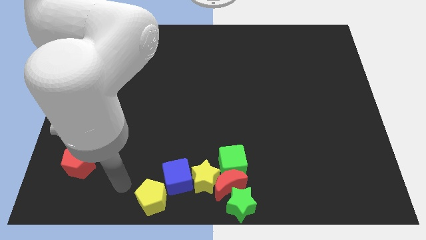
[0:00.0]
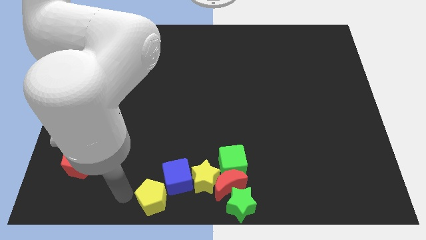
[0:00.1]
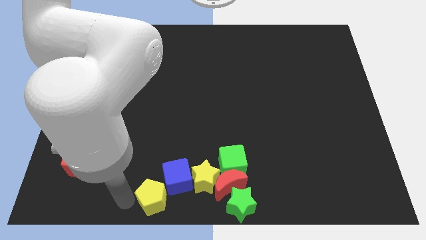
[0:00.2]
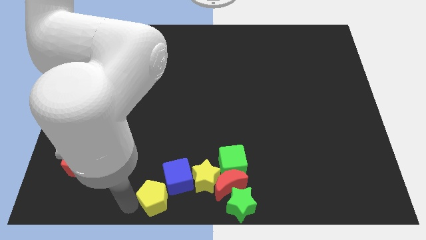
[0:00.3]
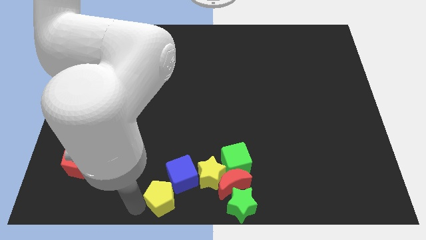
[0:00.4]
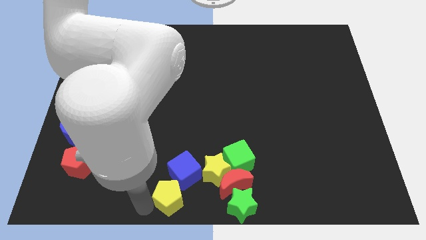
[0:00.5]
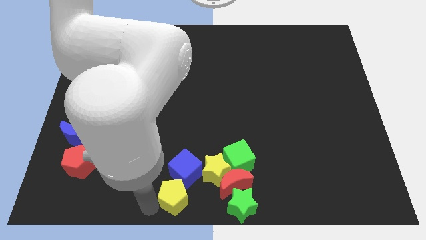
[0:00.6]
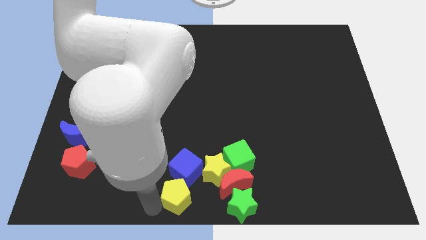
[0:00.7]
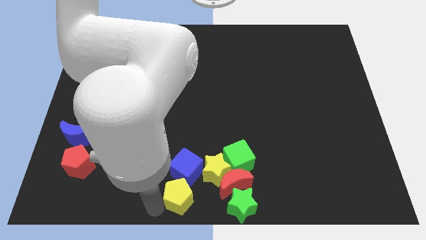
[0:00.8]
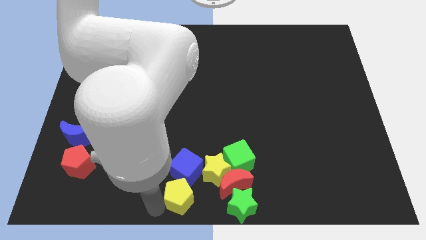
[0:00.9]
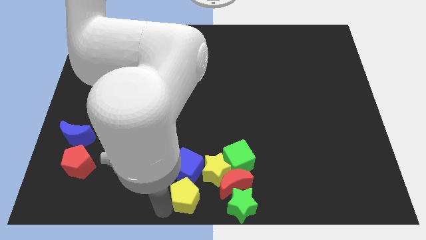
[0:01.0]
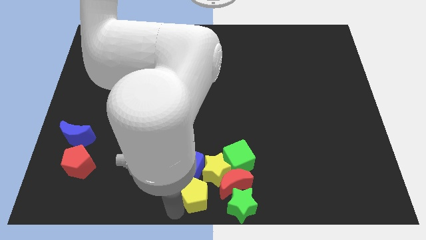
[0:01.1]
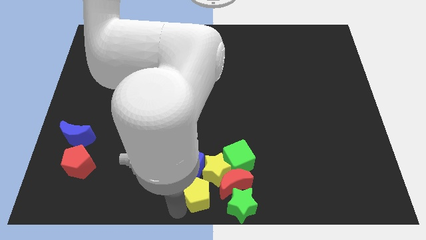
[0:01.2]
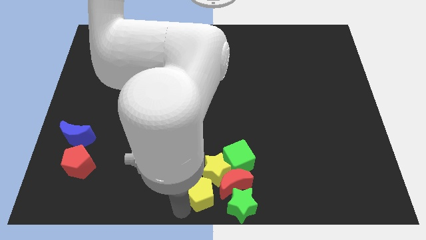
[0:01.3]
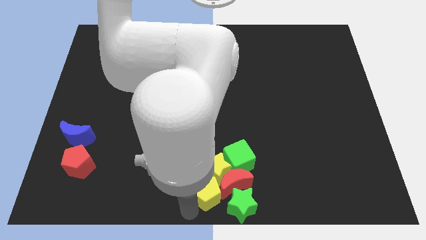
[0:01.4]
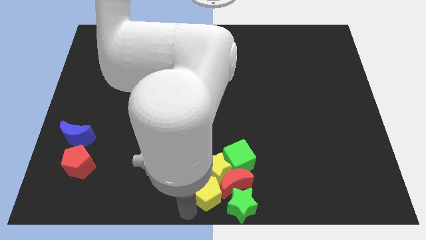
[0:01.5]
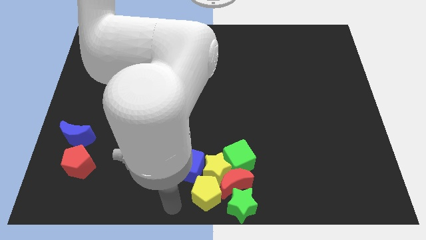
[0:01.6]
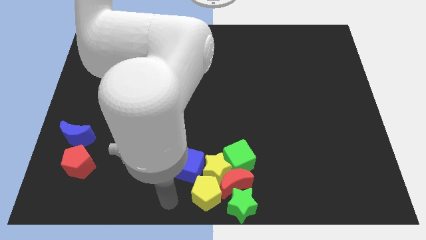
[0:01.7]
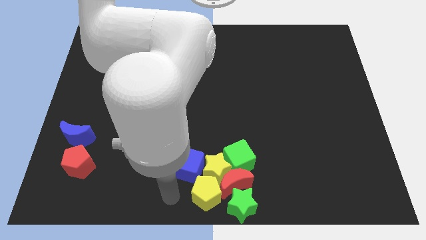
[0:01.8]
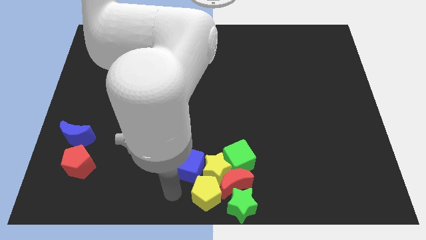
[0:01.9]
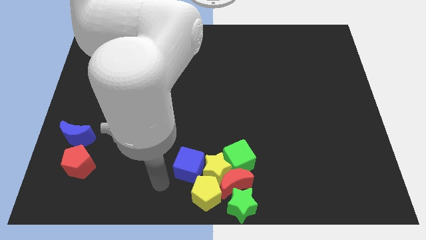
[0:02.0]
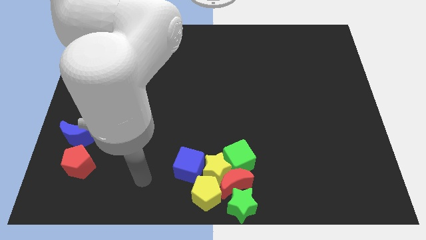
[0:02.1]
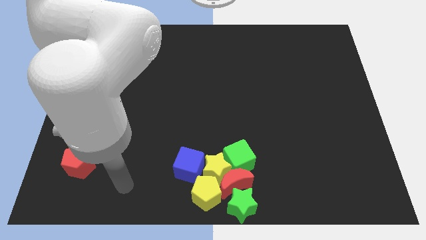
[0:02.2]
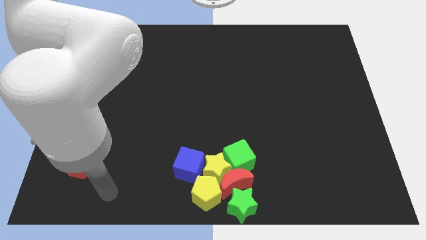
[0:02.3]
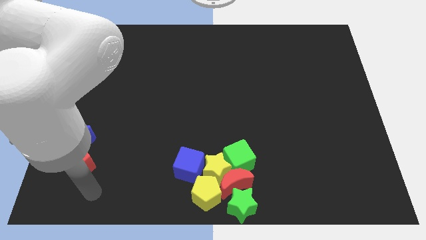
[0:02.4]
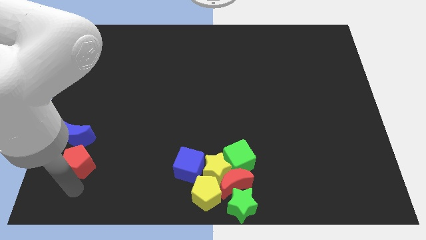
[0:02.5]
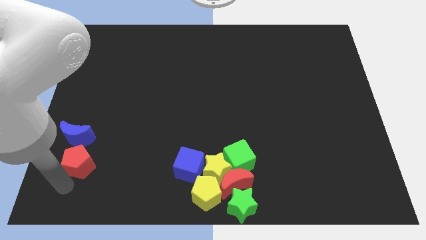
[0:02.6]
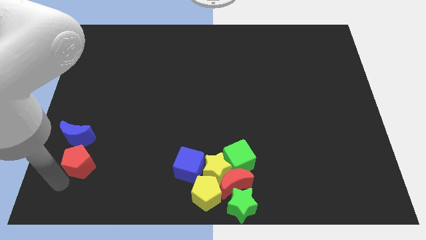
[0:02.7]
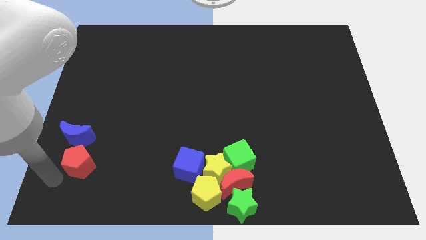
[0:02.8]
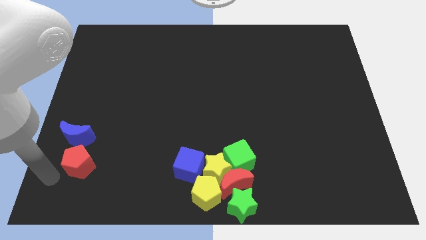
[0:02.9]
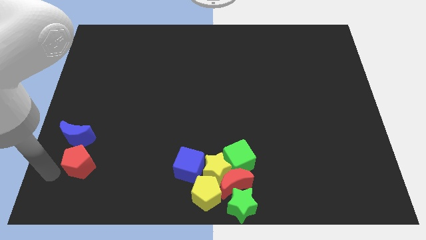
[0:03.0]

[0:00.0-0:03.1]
place the yellow pentagon below the yellow star

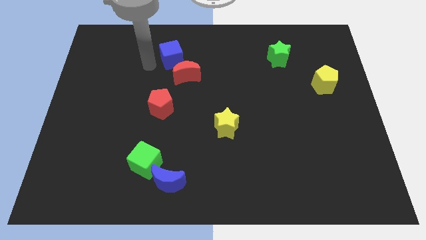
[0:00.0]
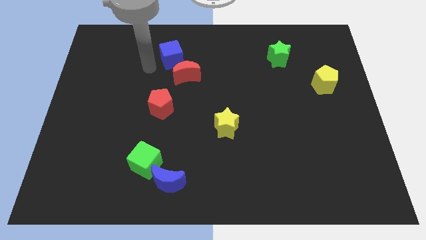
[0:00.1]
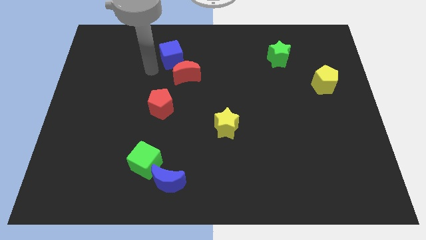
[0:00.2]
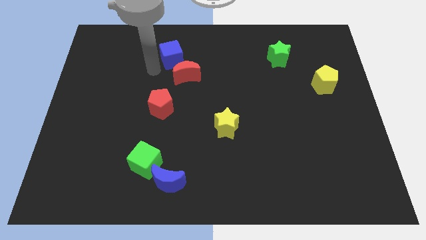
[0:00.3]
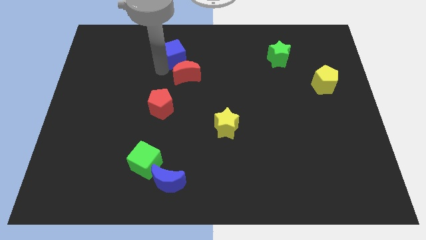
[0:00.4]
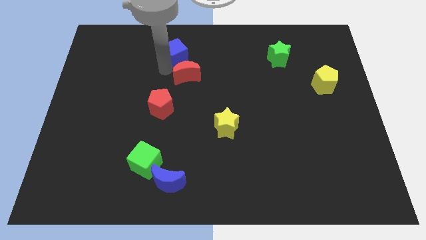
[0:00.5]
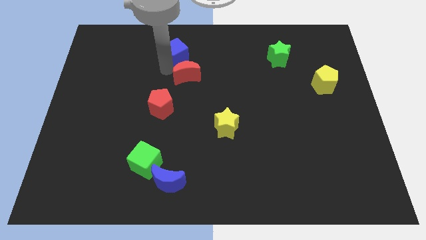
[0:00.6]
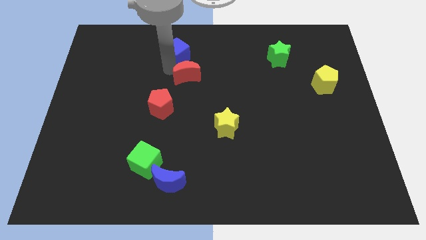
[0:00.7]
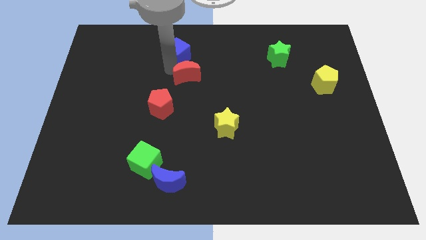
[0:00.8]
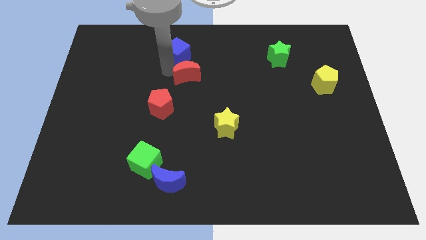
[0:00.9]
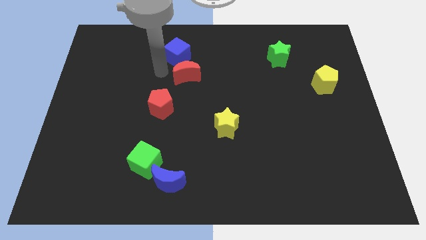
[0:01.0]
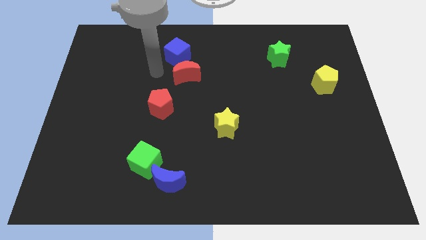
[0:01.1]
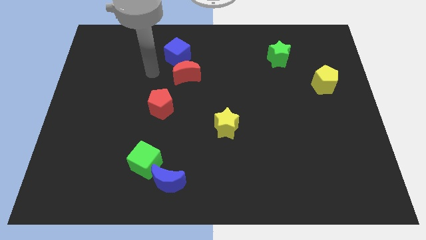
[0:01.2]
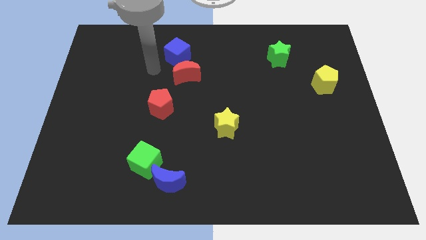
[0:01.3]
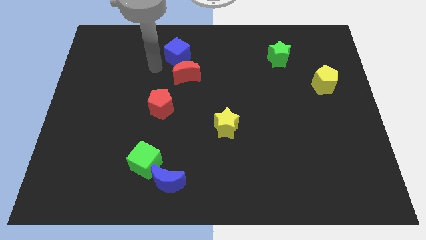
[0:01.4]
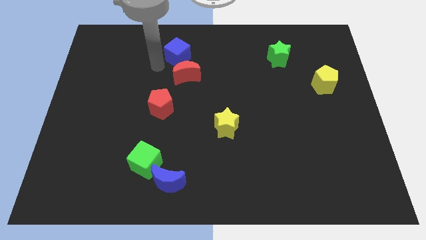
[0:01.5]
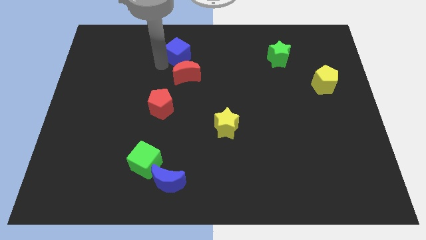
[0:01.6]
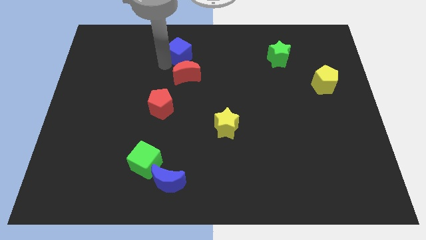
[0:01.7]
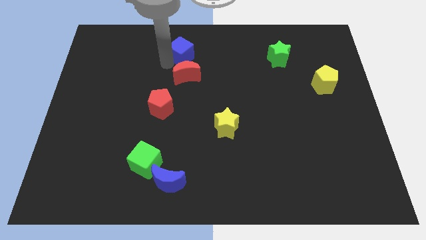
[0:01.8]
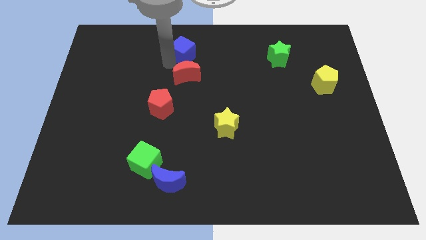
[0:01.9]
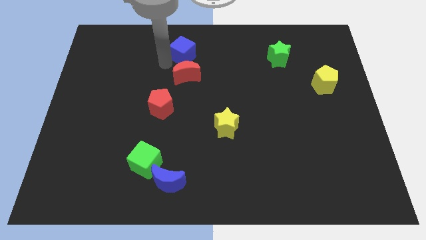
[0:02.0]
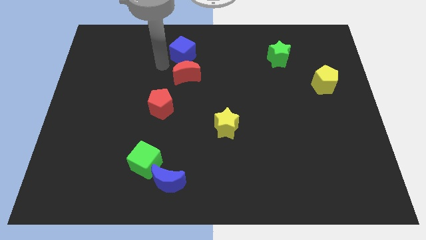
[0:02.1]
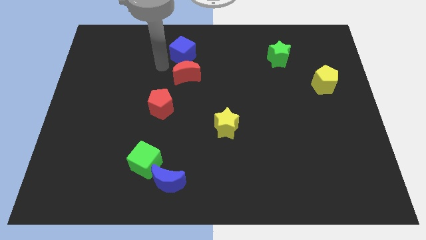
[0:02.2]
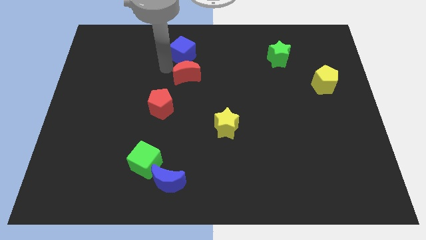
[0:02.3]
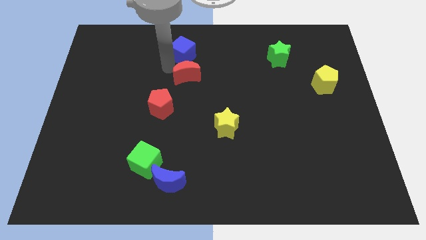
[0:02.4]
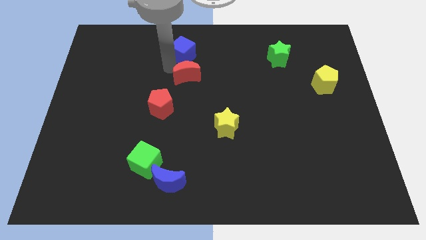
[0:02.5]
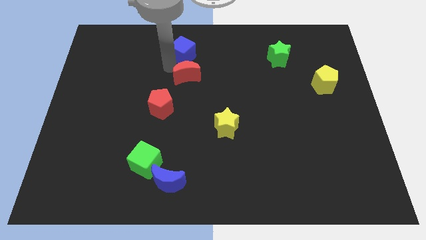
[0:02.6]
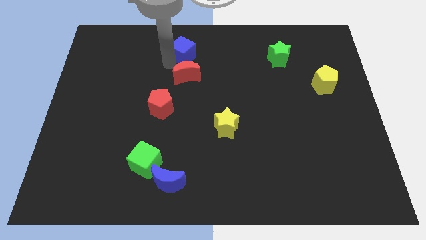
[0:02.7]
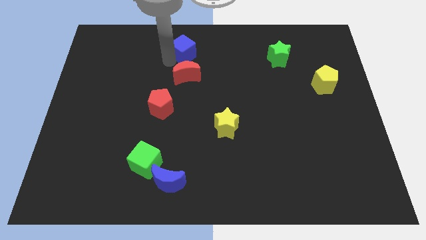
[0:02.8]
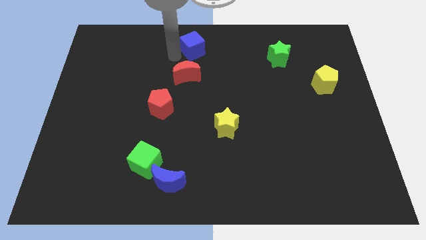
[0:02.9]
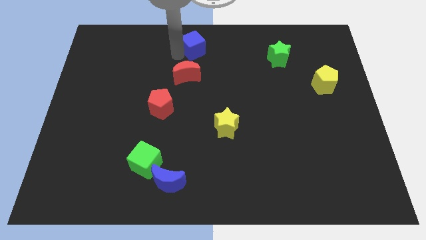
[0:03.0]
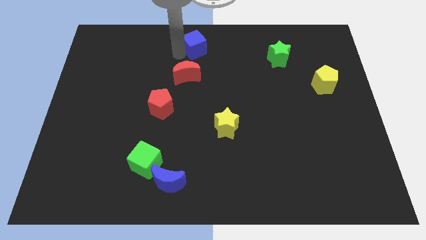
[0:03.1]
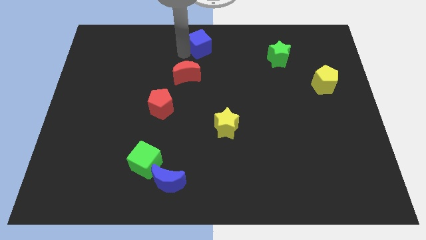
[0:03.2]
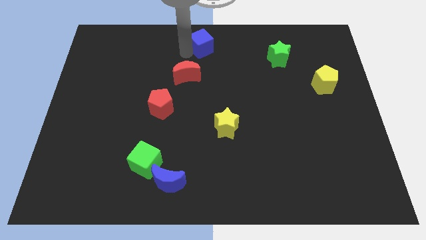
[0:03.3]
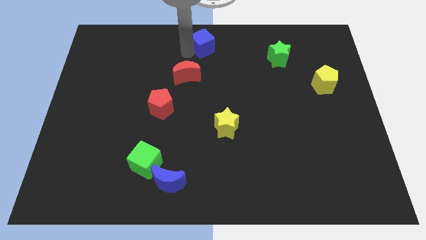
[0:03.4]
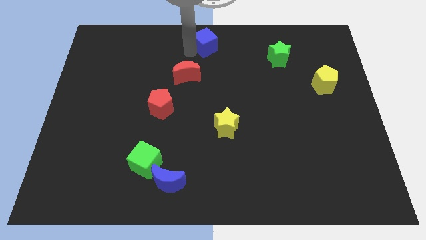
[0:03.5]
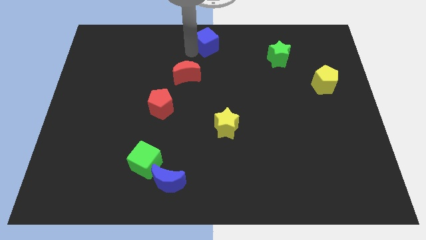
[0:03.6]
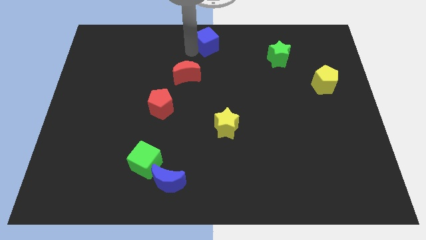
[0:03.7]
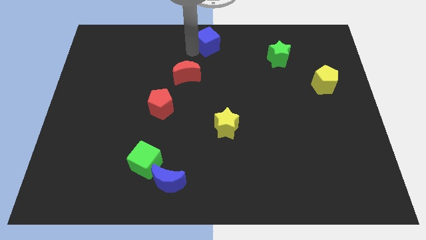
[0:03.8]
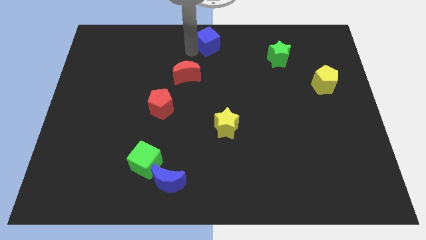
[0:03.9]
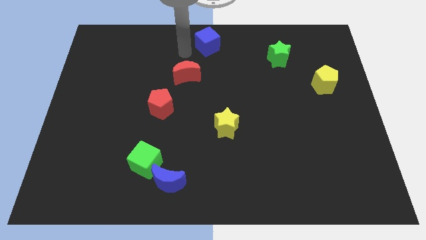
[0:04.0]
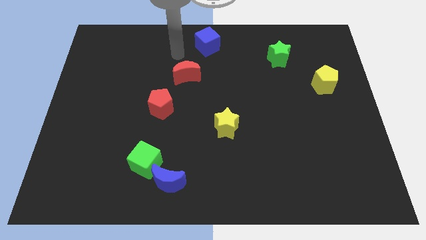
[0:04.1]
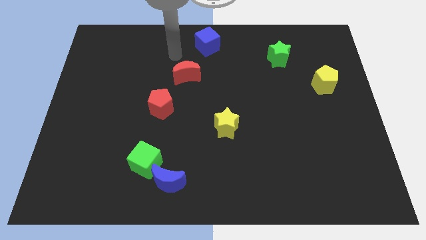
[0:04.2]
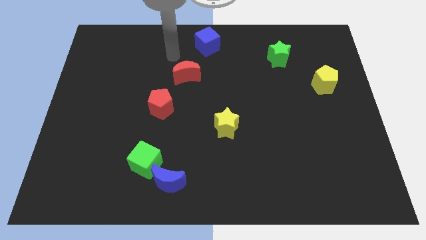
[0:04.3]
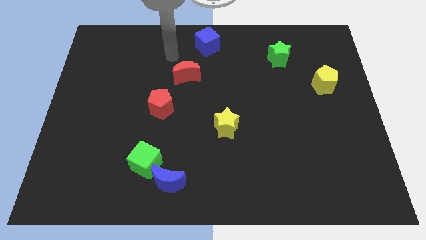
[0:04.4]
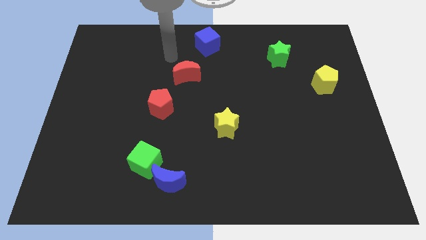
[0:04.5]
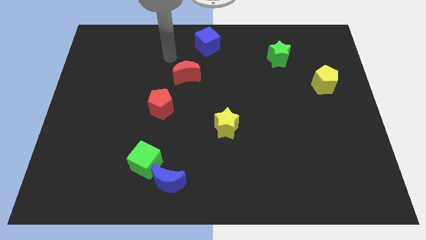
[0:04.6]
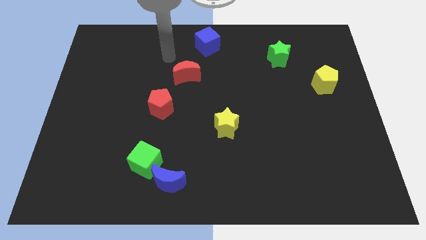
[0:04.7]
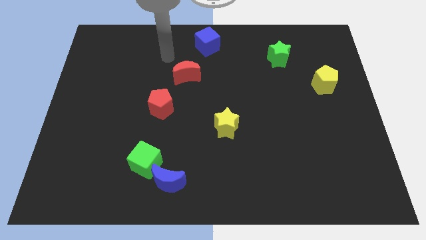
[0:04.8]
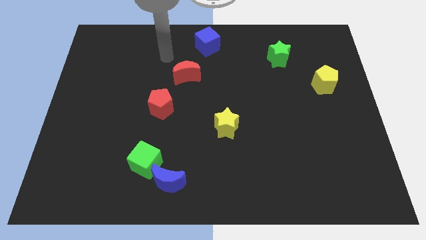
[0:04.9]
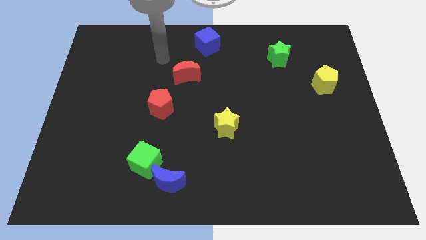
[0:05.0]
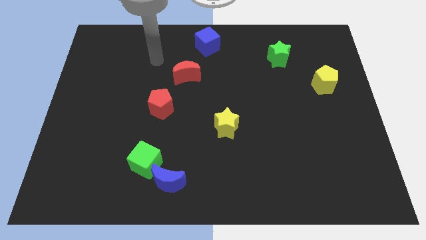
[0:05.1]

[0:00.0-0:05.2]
push the blue cube to the center top of the board

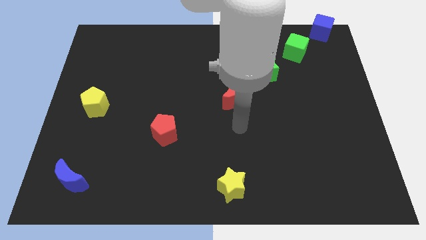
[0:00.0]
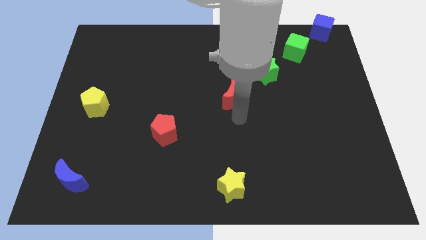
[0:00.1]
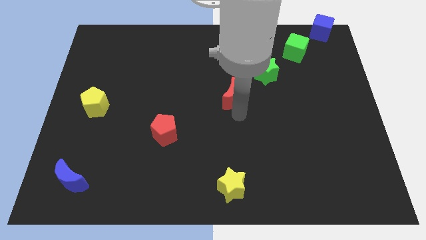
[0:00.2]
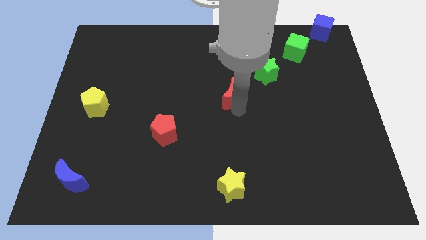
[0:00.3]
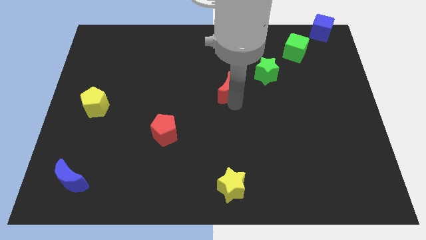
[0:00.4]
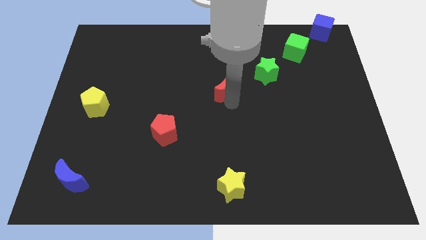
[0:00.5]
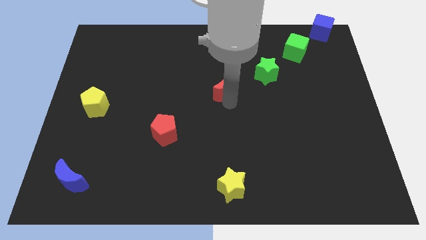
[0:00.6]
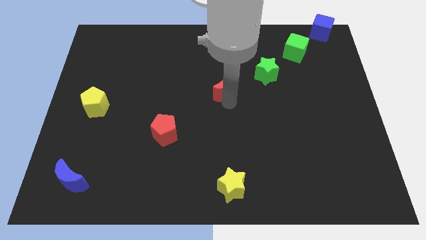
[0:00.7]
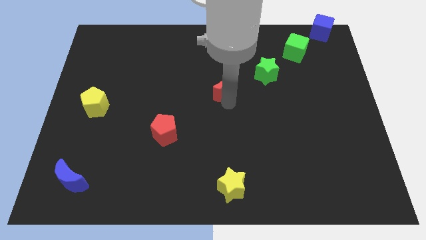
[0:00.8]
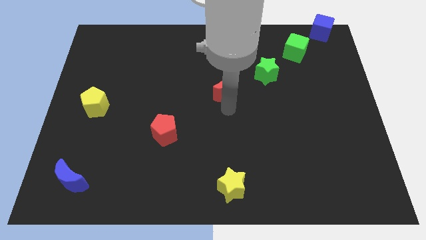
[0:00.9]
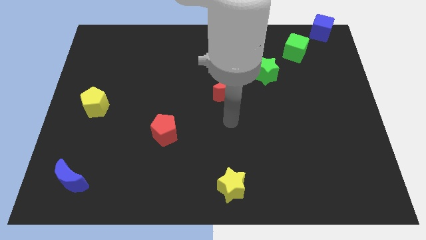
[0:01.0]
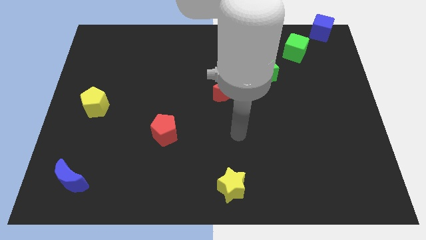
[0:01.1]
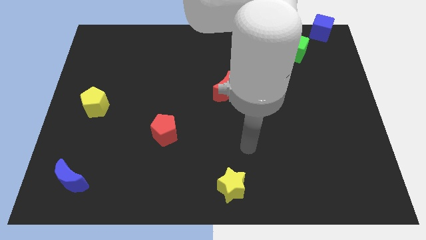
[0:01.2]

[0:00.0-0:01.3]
move the red crescent slightly upwards
